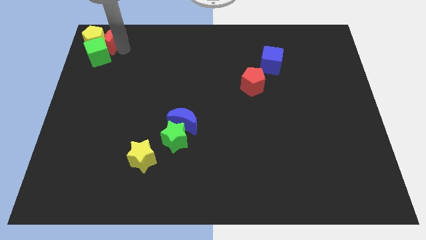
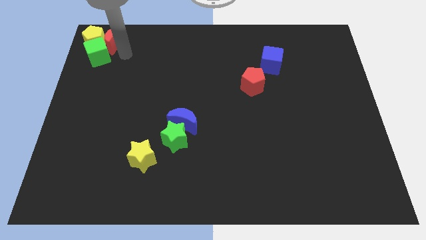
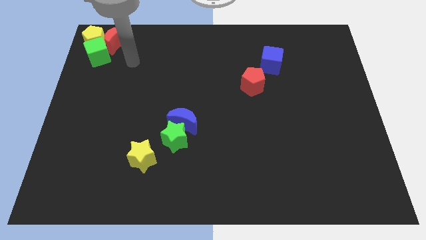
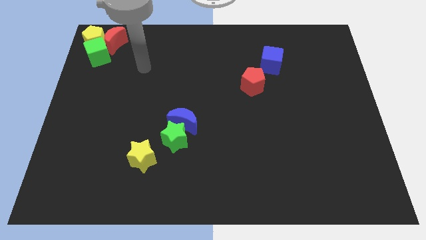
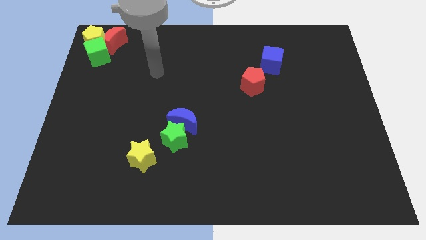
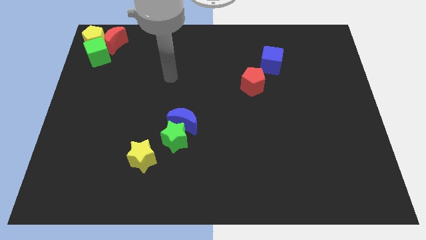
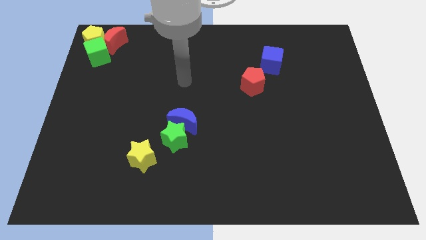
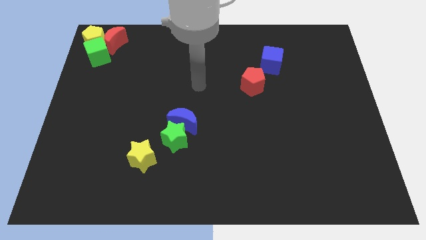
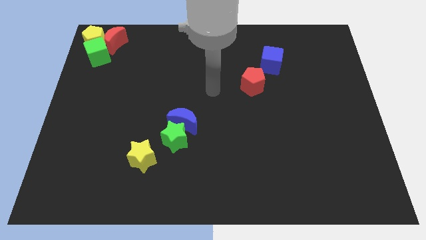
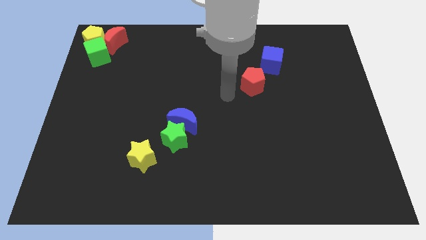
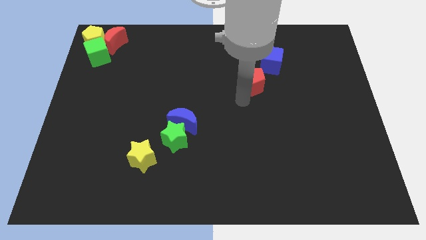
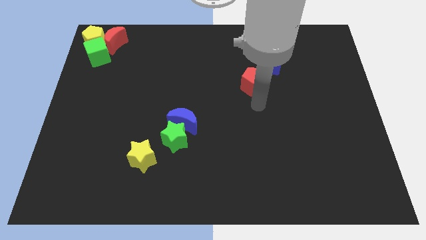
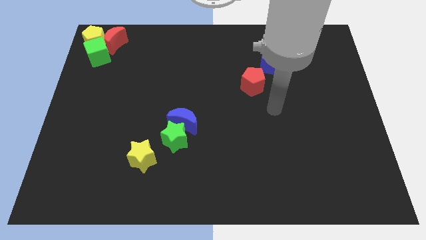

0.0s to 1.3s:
move the arm away from the red moon

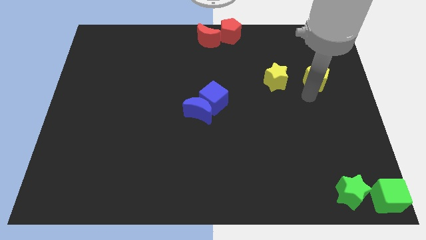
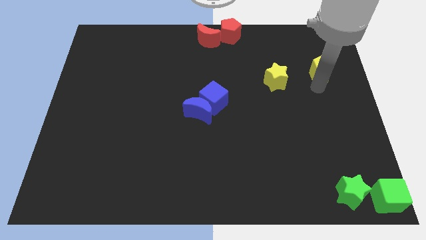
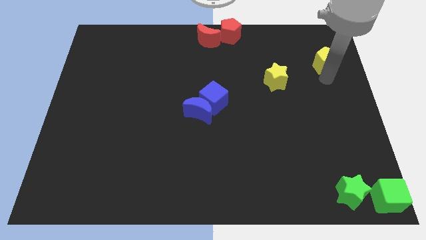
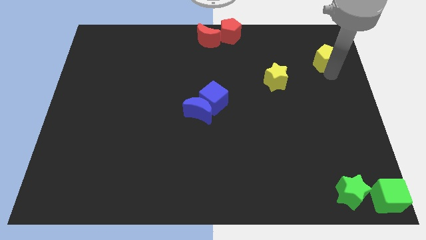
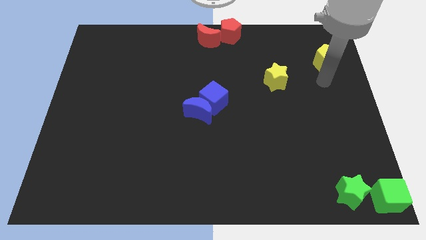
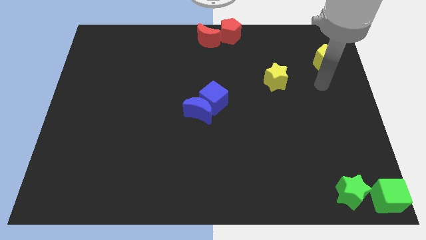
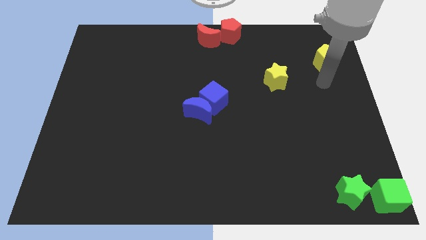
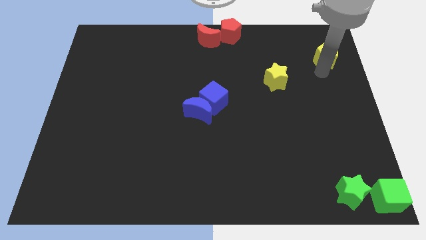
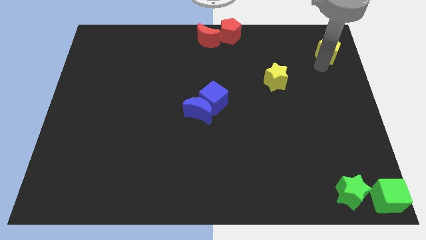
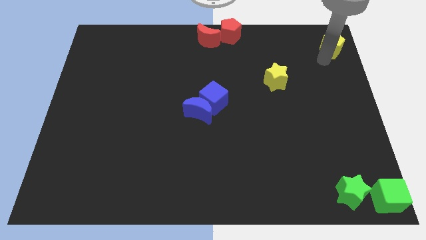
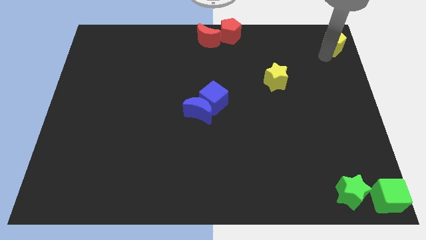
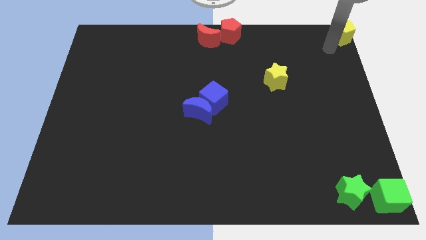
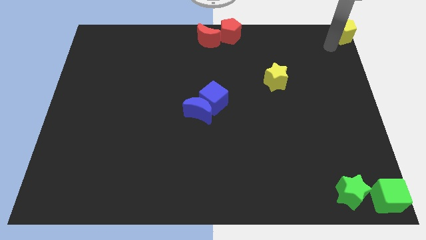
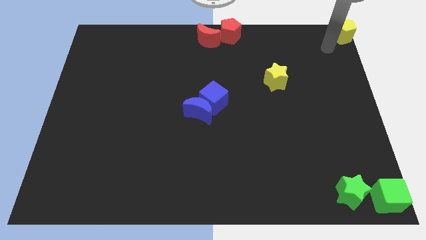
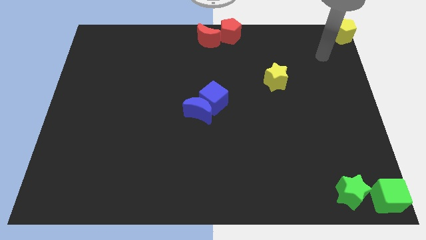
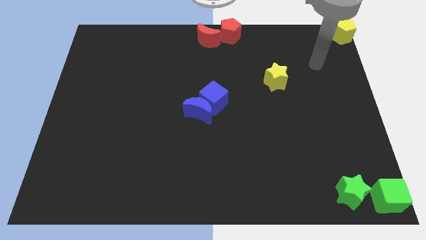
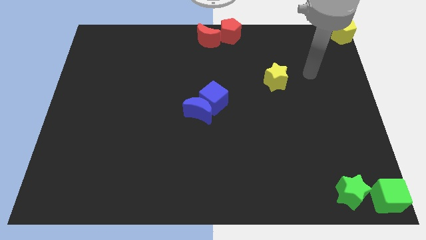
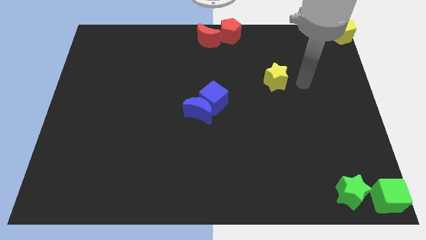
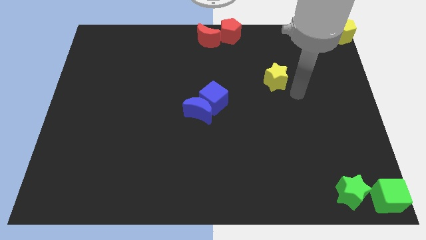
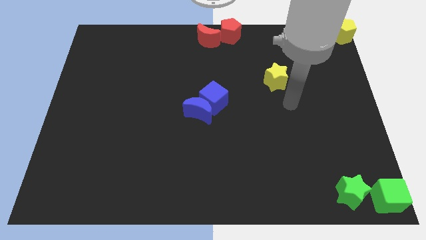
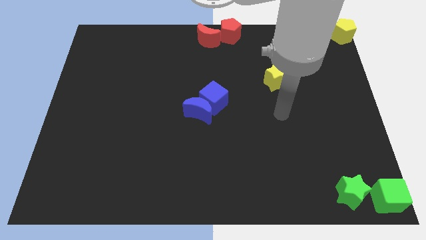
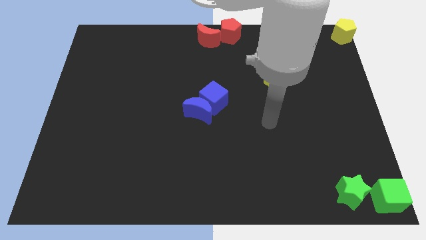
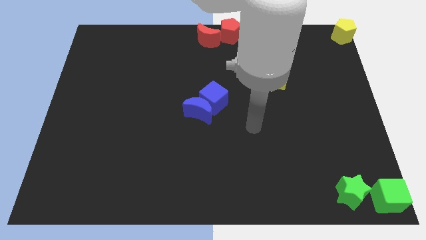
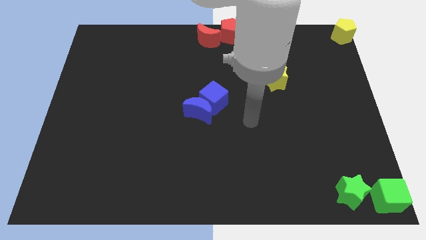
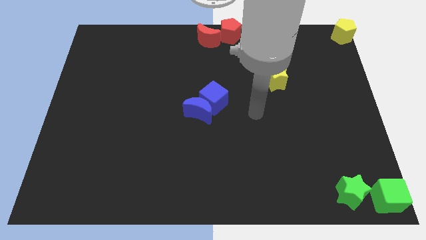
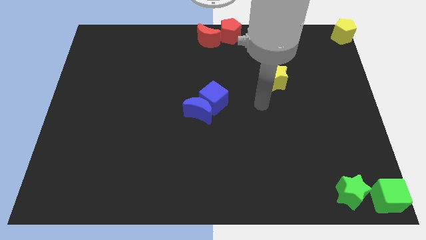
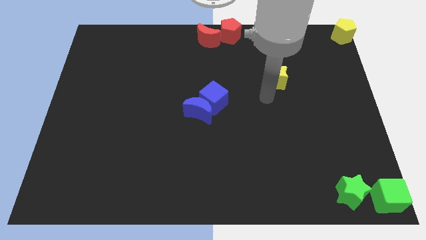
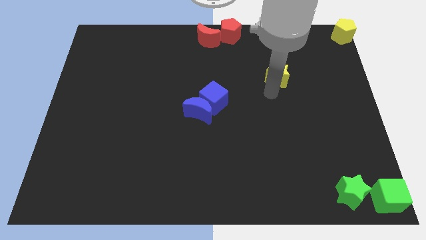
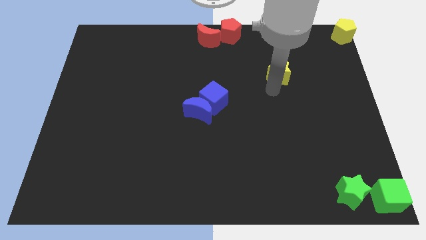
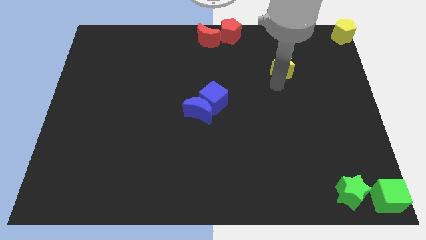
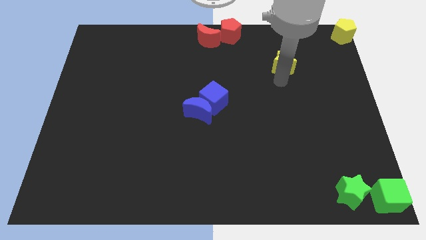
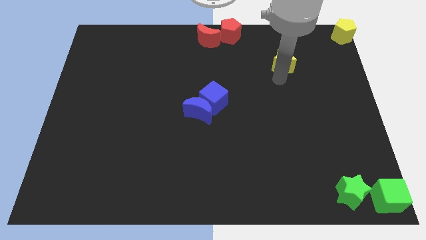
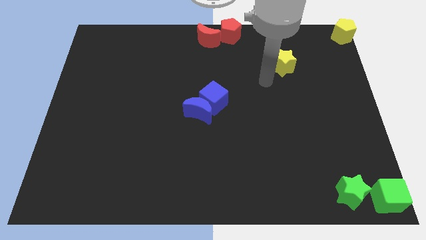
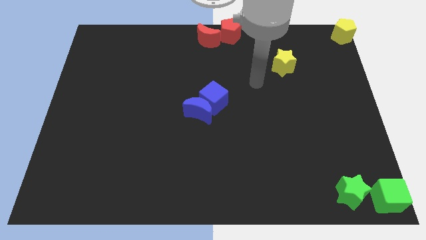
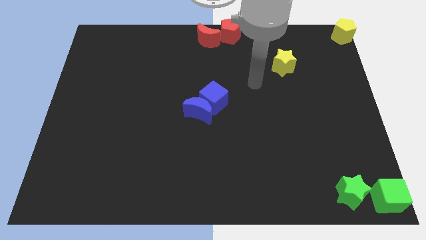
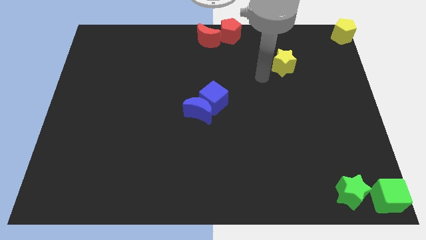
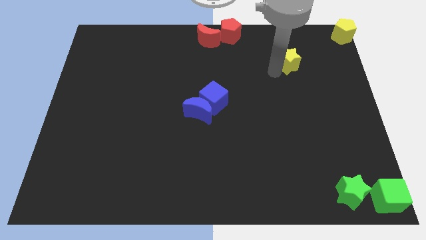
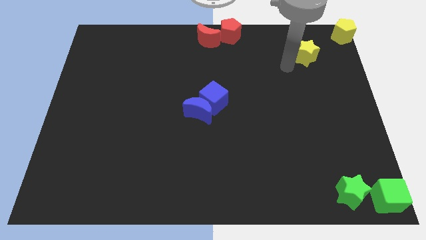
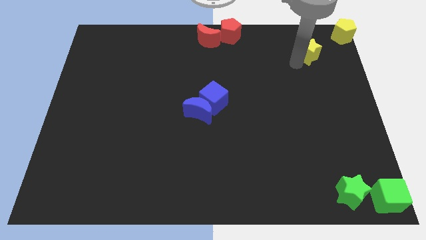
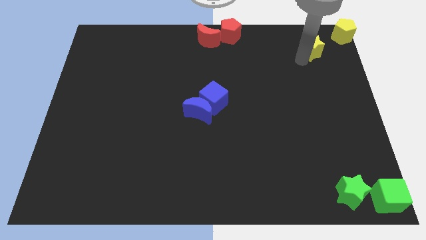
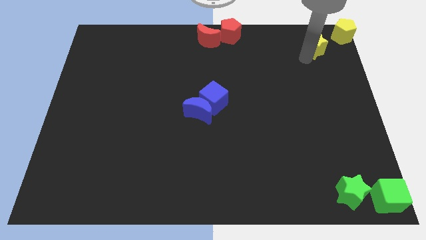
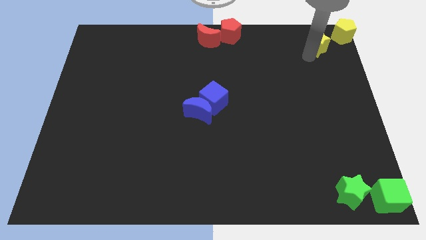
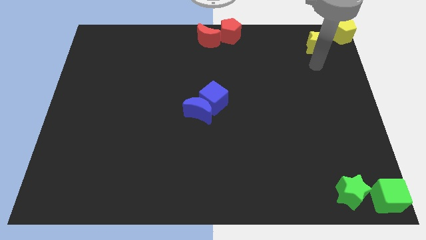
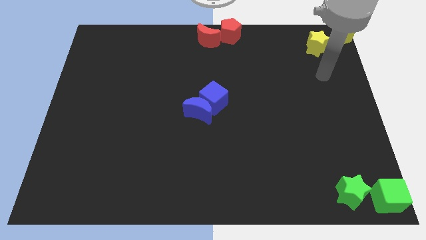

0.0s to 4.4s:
push the yellow blocks to the top right corner of the board

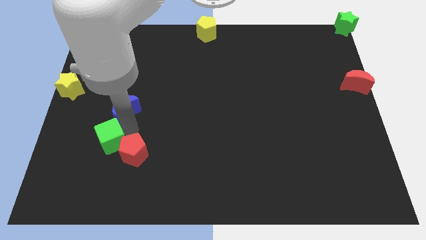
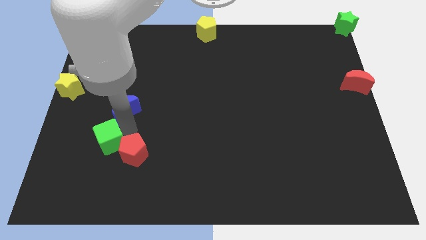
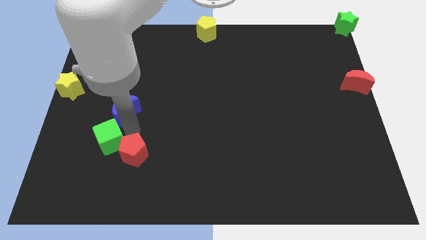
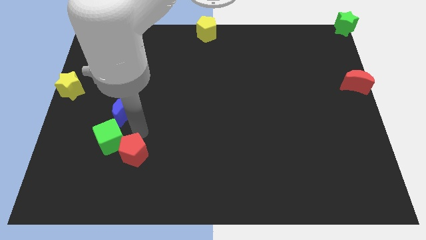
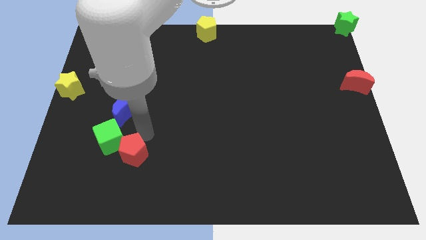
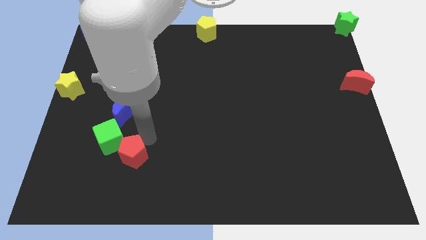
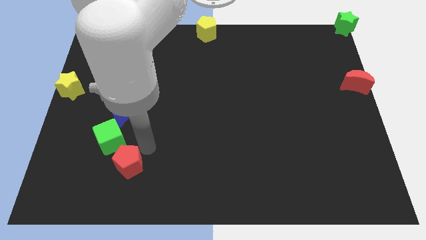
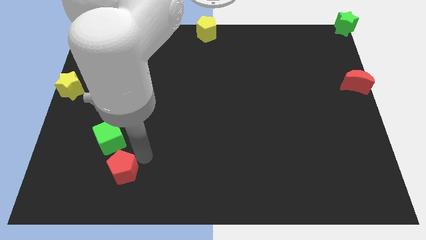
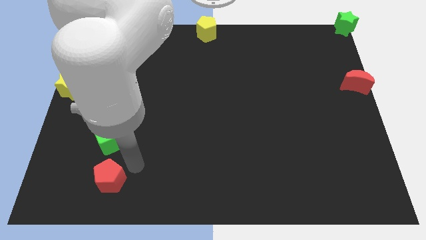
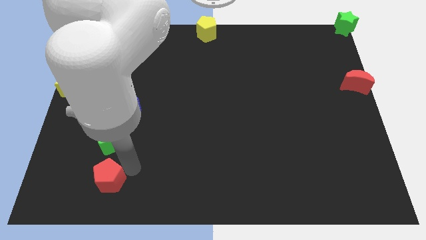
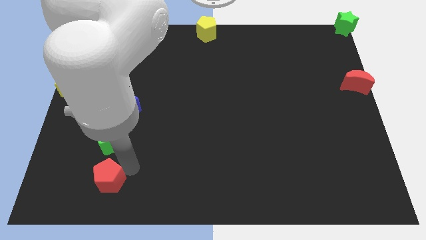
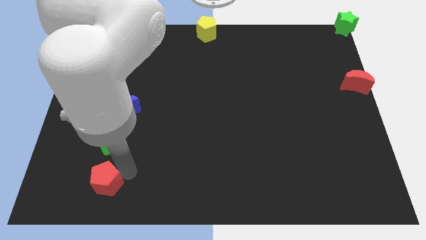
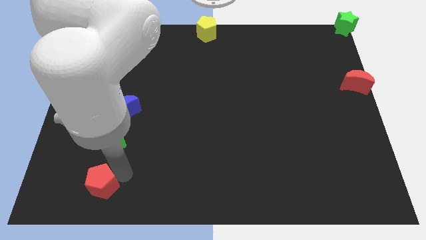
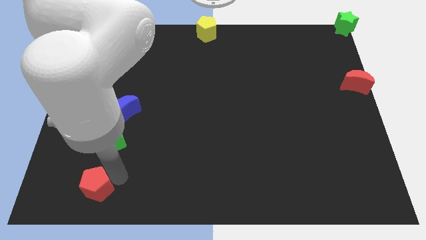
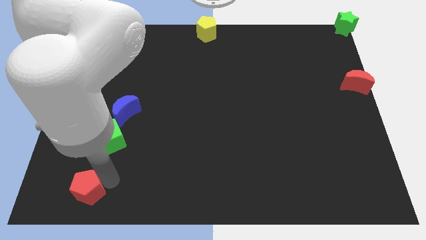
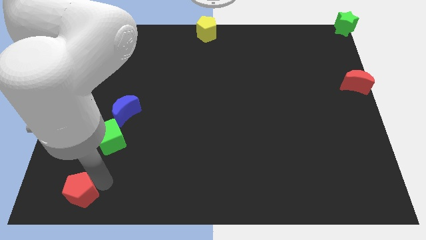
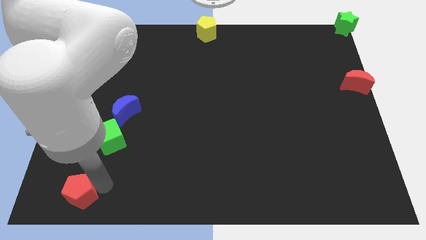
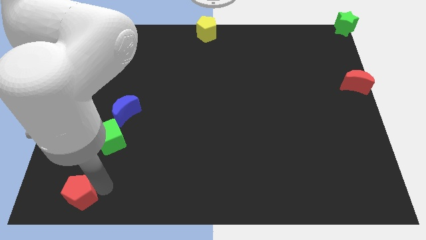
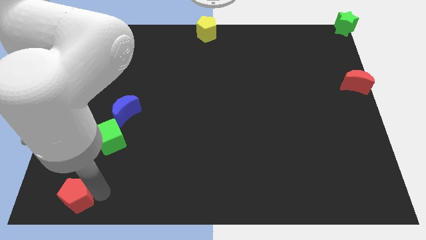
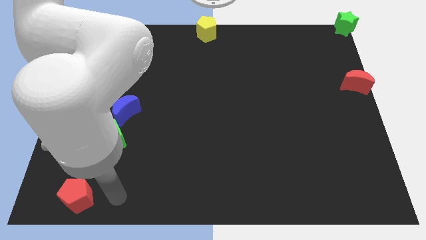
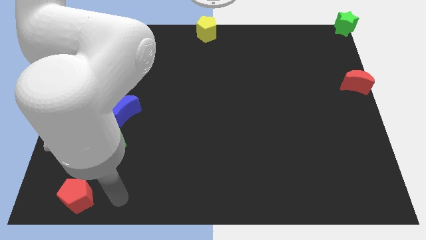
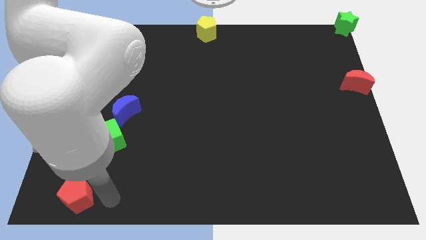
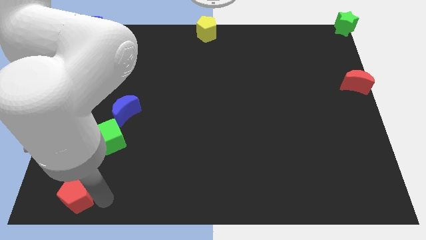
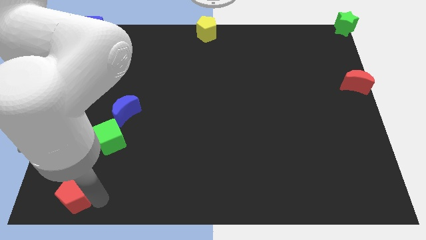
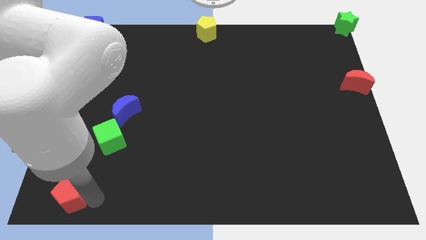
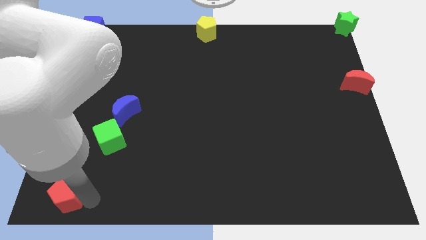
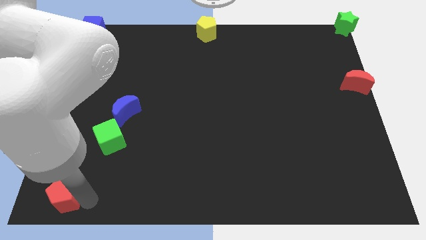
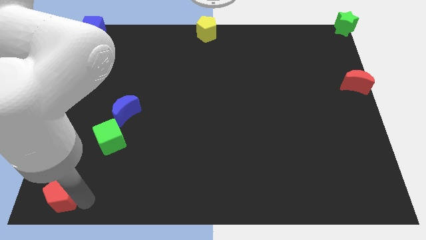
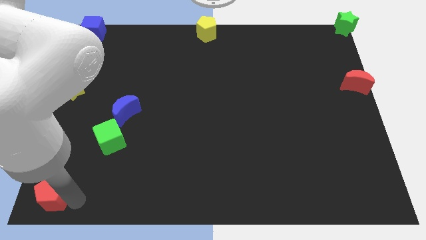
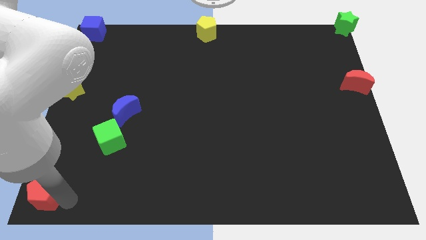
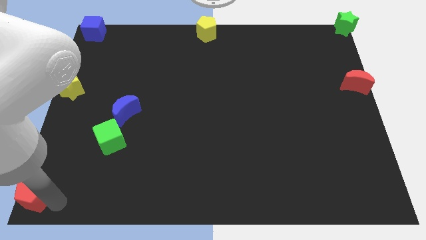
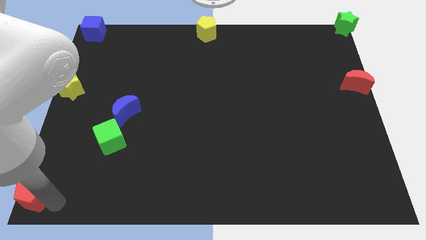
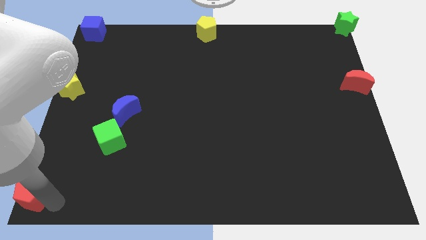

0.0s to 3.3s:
move the red pentagon to the red pentagon to the bottom left of the board

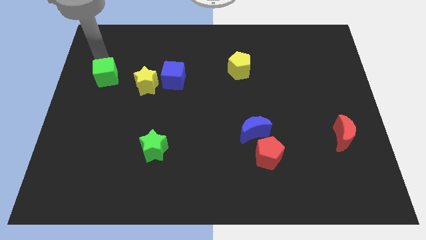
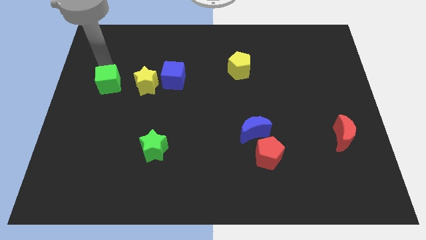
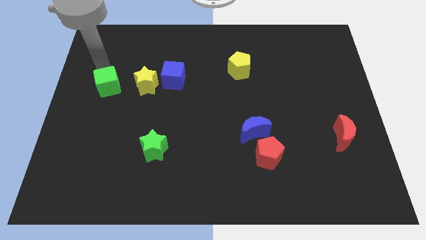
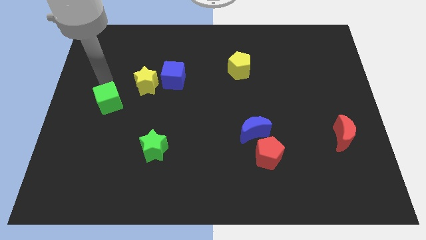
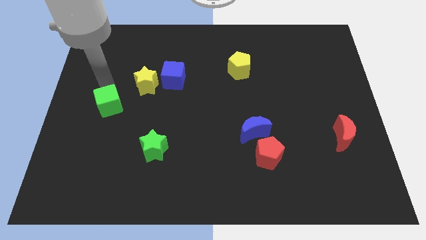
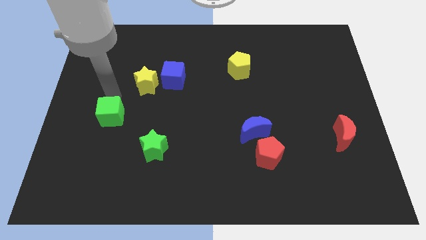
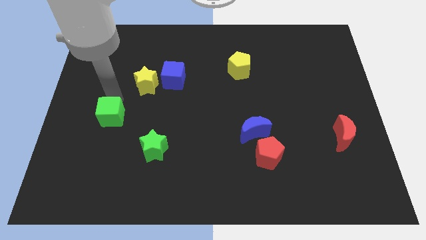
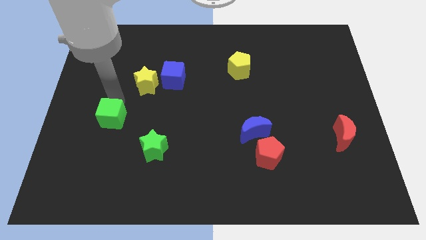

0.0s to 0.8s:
move the green cube to the top left of green star
